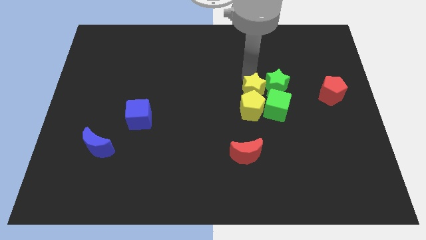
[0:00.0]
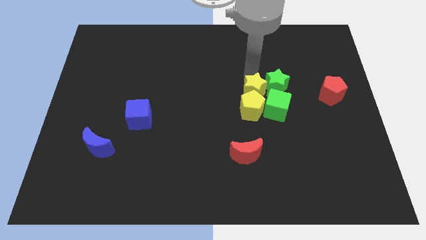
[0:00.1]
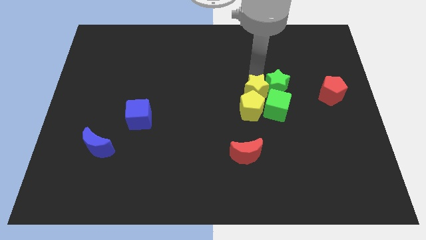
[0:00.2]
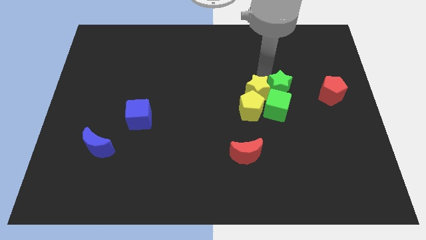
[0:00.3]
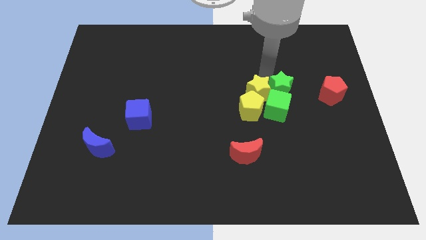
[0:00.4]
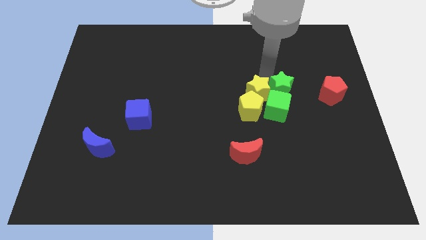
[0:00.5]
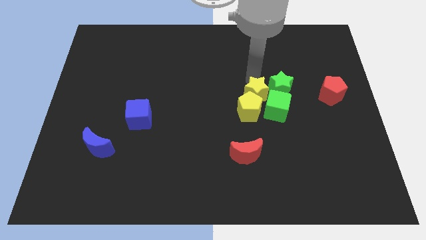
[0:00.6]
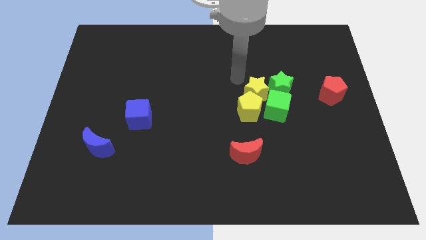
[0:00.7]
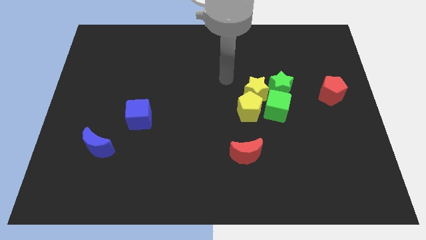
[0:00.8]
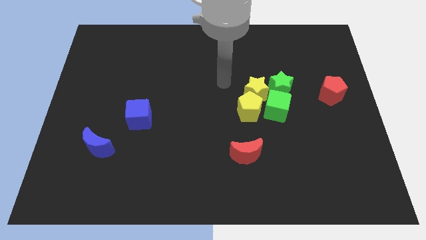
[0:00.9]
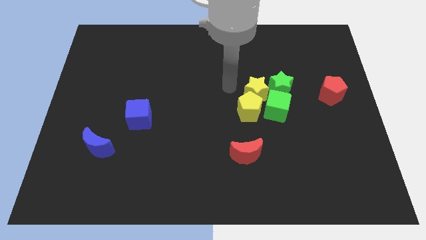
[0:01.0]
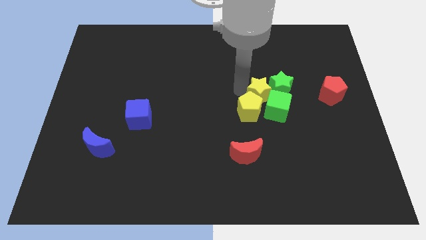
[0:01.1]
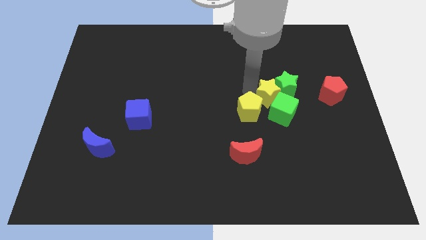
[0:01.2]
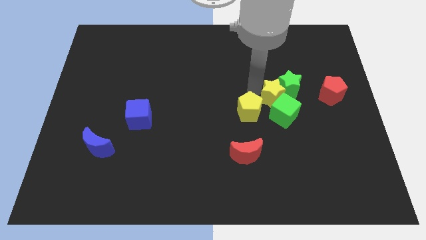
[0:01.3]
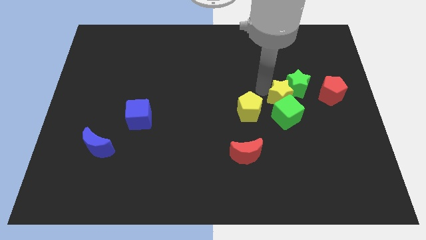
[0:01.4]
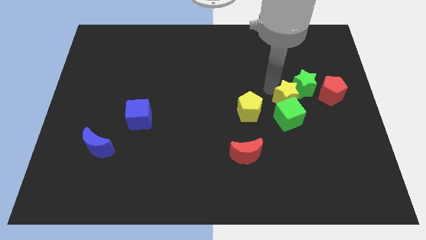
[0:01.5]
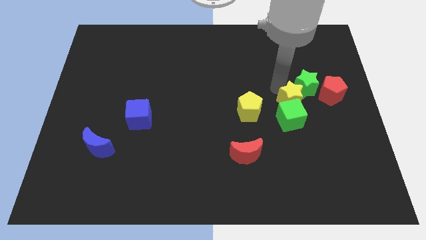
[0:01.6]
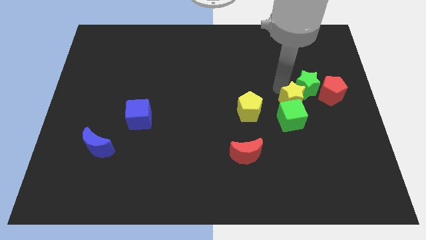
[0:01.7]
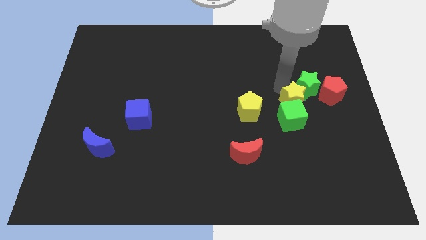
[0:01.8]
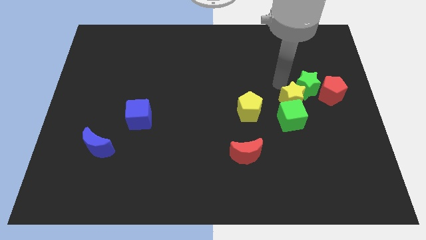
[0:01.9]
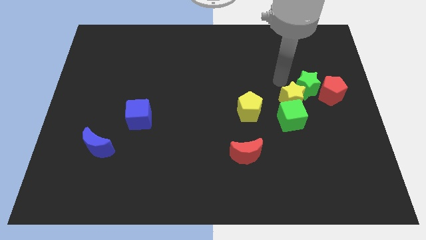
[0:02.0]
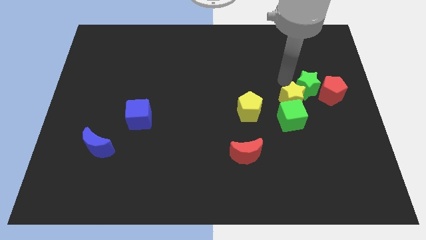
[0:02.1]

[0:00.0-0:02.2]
move the yellow star towards the right

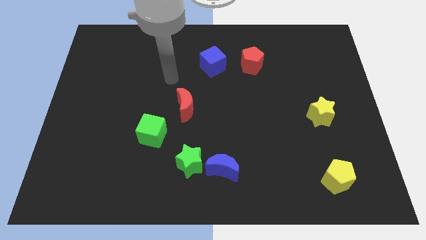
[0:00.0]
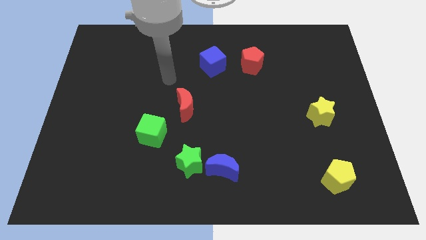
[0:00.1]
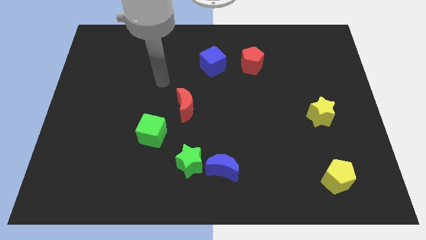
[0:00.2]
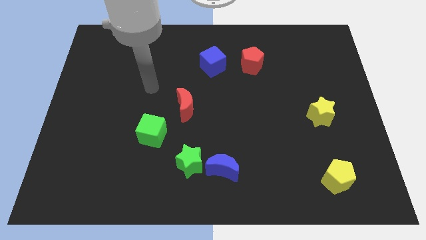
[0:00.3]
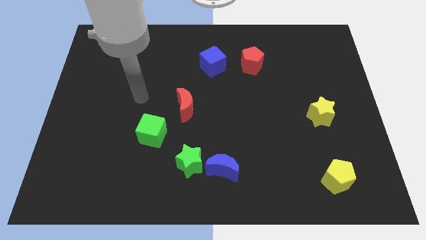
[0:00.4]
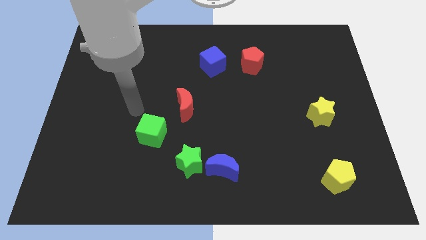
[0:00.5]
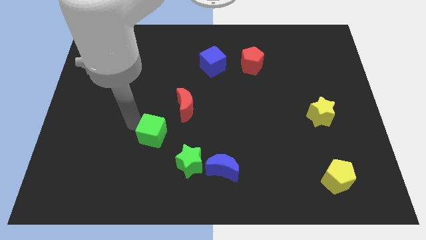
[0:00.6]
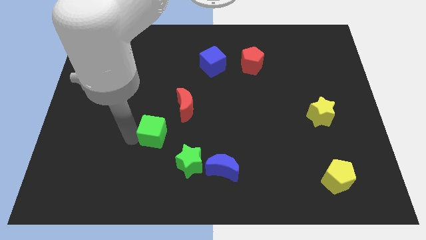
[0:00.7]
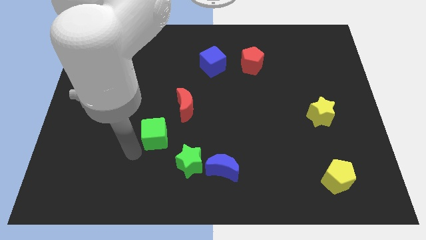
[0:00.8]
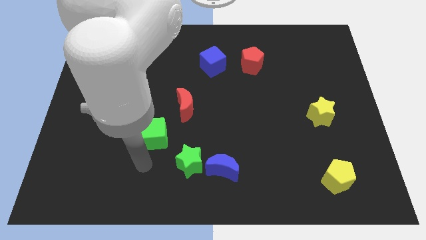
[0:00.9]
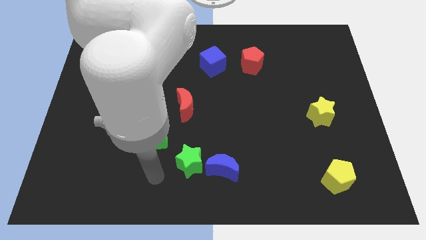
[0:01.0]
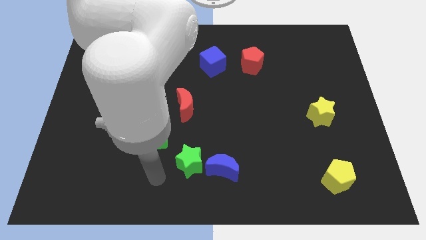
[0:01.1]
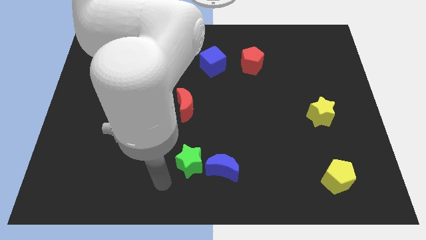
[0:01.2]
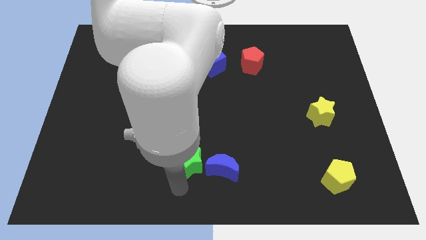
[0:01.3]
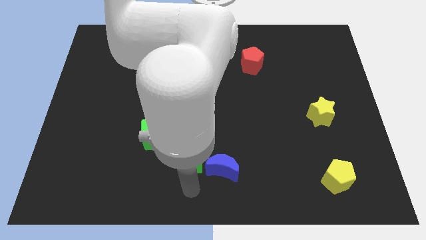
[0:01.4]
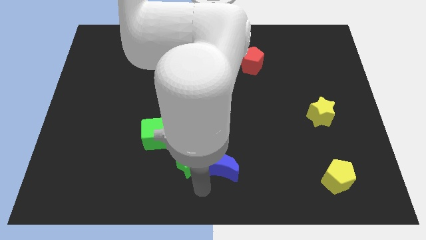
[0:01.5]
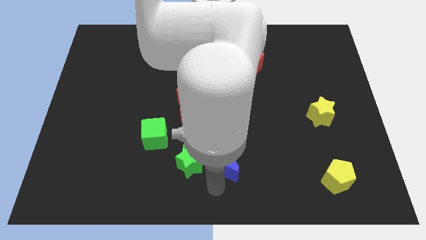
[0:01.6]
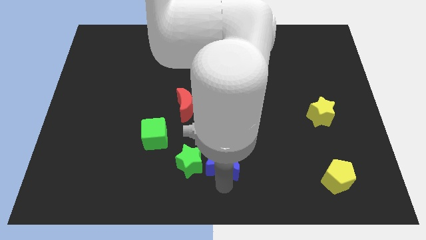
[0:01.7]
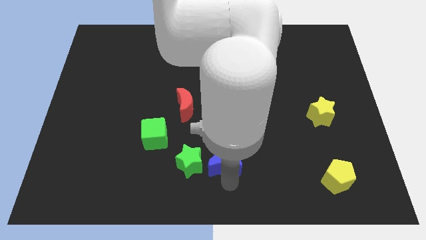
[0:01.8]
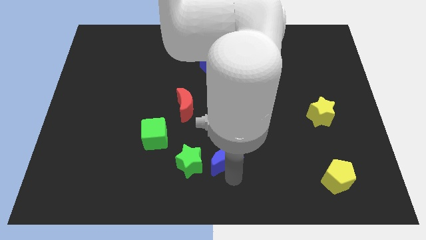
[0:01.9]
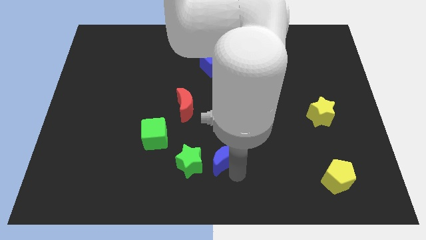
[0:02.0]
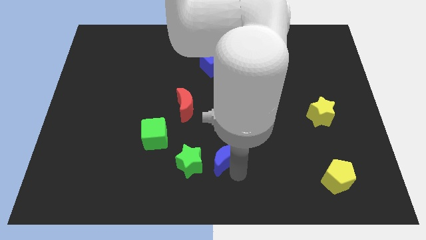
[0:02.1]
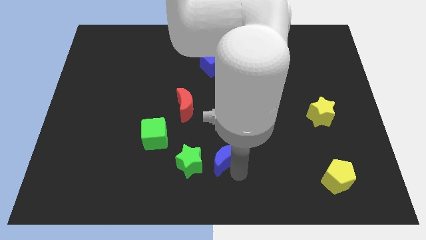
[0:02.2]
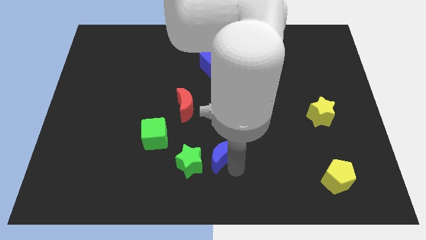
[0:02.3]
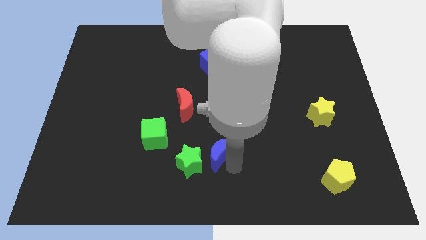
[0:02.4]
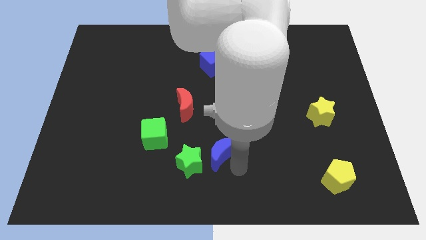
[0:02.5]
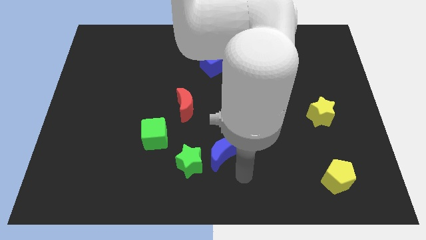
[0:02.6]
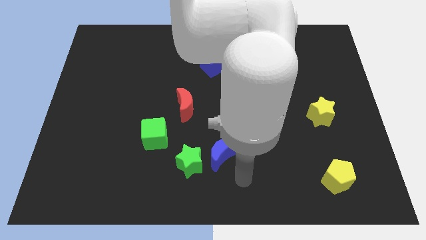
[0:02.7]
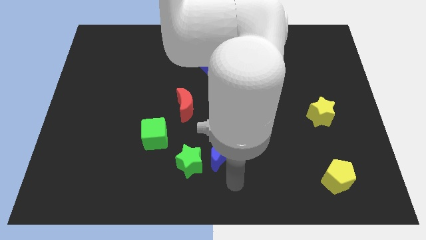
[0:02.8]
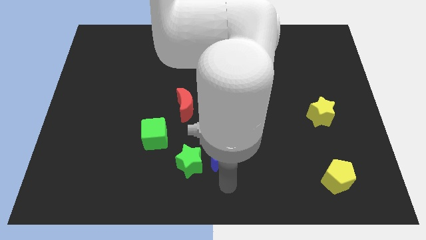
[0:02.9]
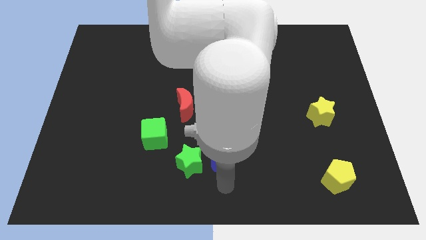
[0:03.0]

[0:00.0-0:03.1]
tap on the bottom side of blue moon

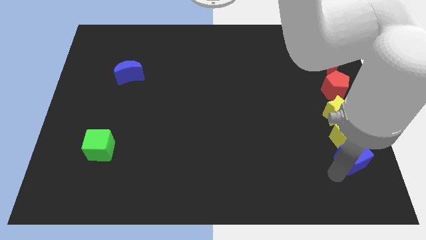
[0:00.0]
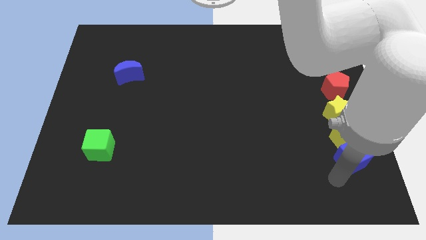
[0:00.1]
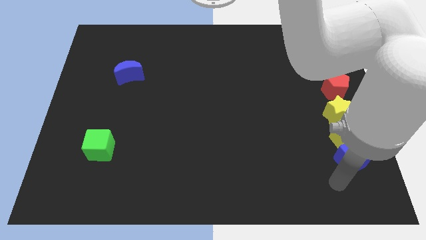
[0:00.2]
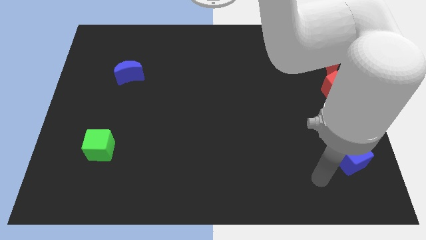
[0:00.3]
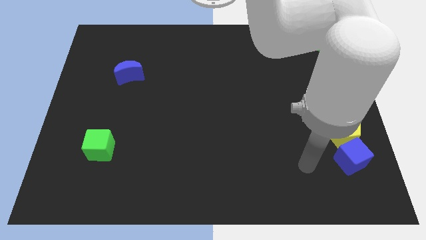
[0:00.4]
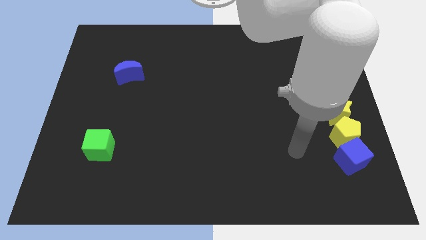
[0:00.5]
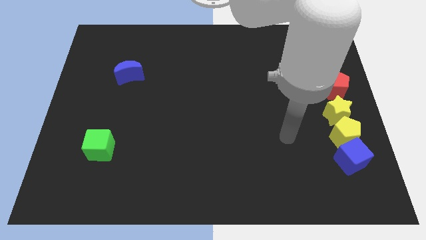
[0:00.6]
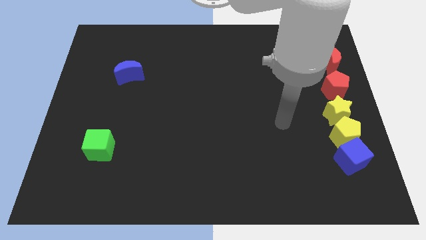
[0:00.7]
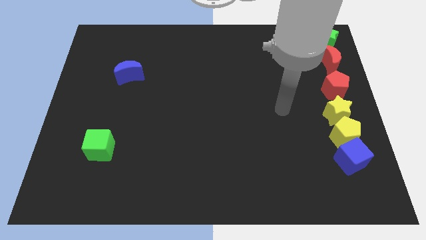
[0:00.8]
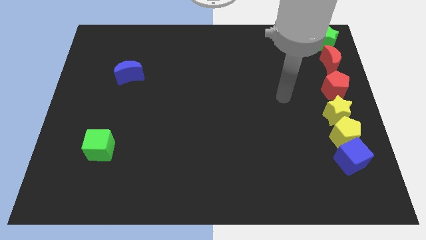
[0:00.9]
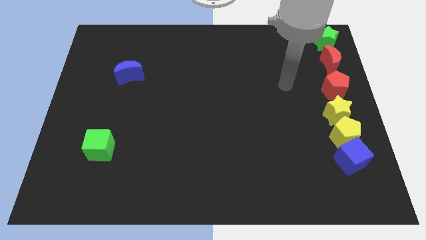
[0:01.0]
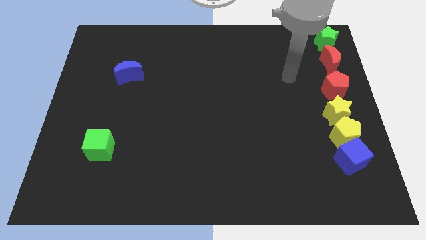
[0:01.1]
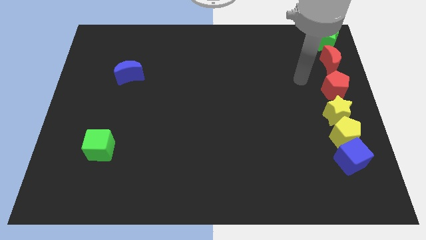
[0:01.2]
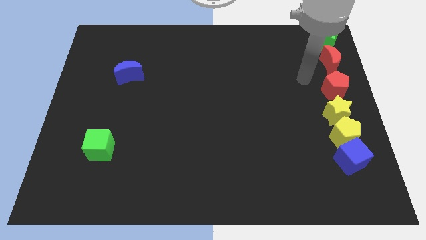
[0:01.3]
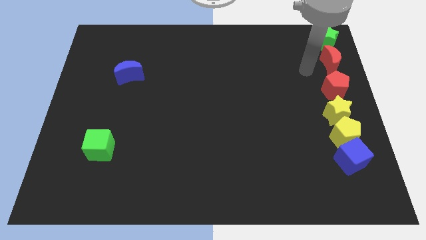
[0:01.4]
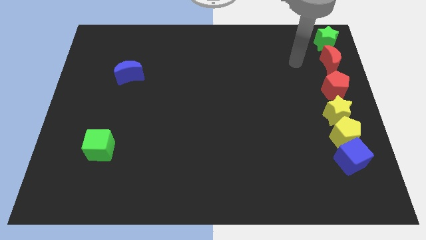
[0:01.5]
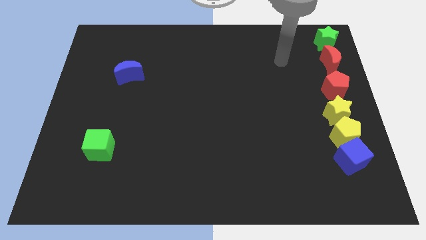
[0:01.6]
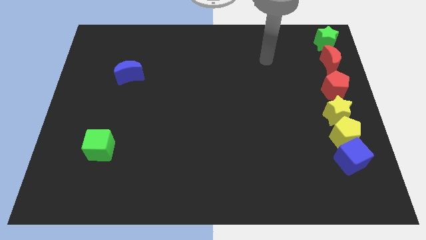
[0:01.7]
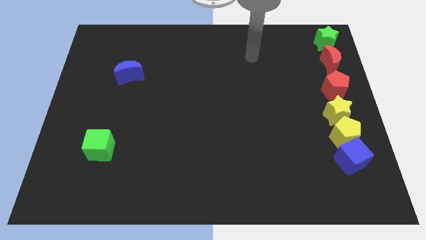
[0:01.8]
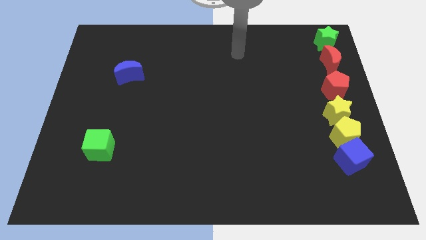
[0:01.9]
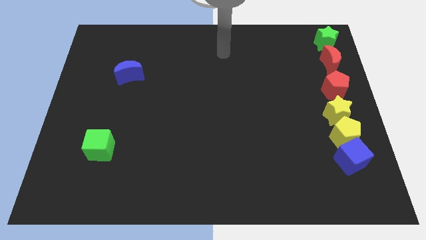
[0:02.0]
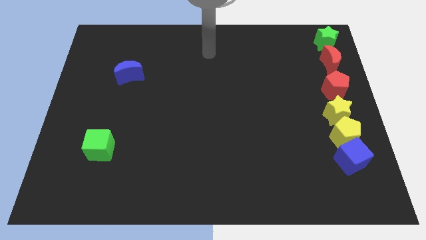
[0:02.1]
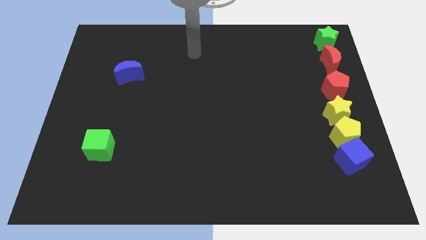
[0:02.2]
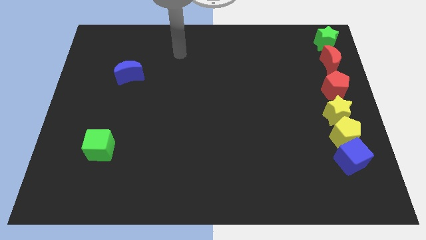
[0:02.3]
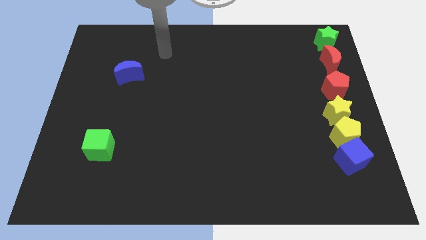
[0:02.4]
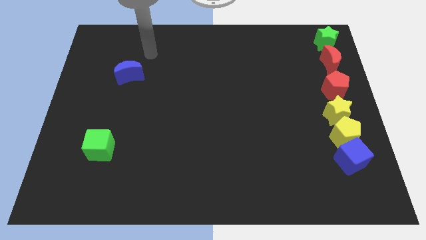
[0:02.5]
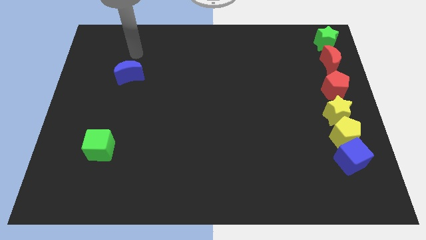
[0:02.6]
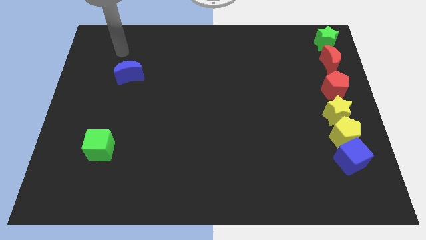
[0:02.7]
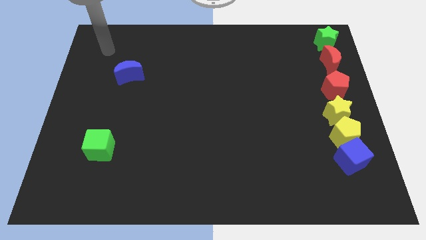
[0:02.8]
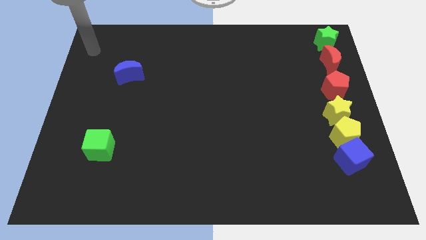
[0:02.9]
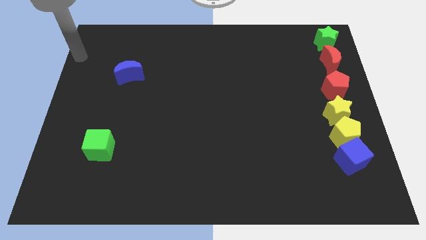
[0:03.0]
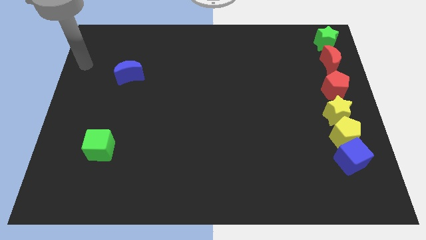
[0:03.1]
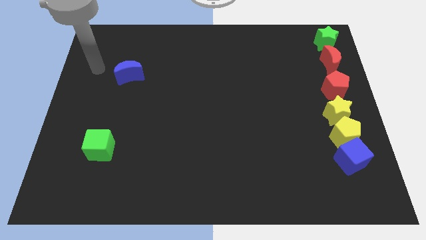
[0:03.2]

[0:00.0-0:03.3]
point your hand at the left side of the blue crescent

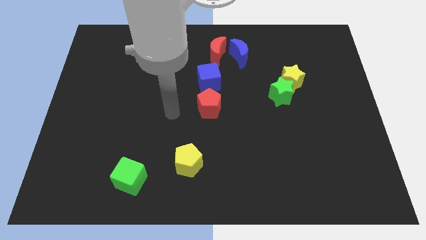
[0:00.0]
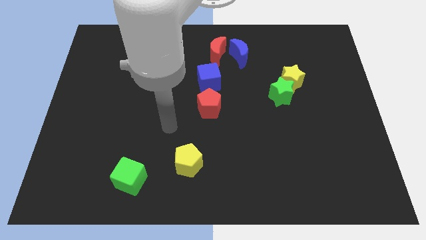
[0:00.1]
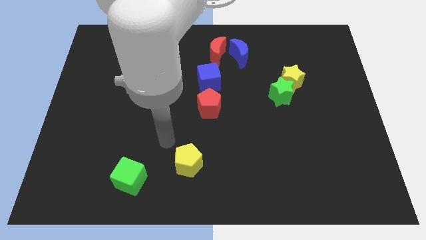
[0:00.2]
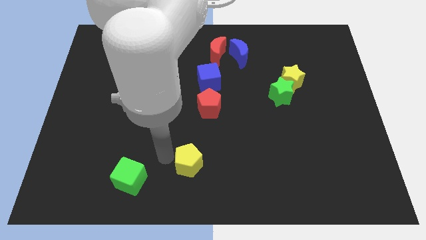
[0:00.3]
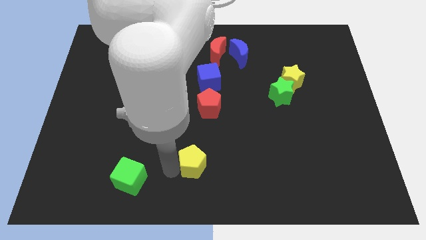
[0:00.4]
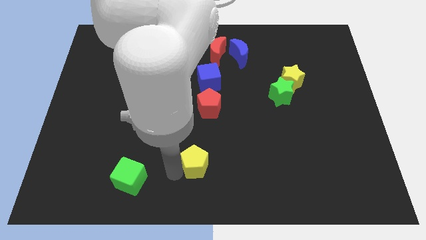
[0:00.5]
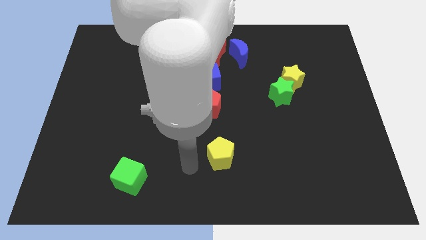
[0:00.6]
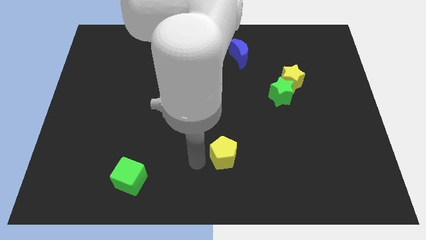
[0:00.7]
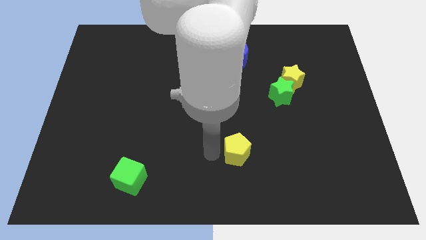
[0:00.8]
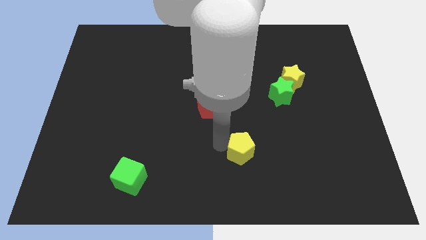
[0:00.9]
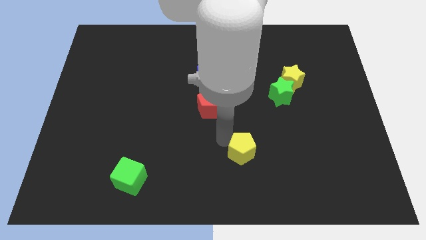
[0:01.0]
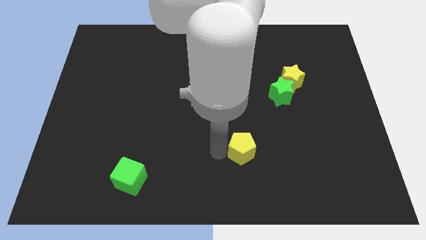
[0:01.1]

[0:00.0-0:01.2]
move the yellow pentagon diagonally bottom left to green star
